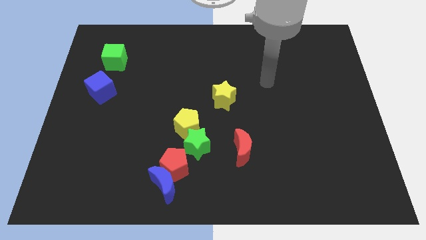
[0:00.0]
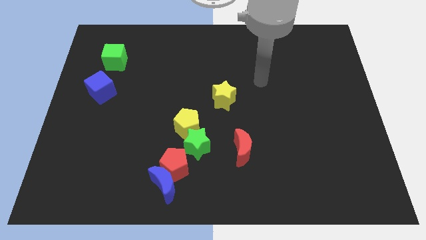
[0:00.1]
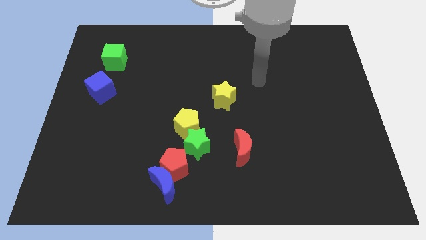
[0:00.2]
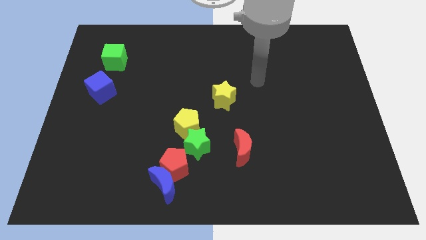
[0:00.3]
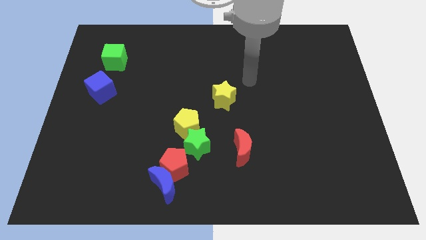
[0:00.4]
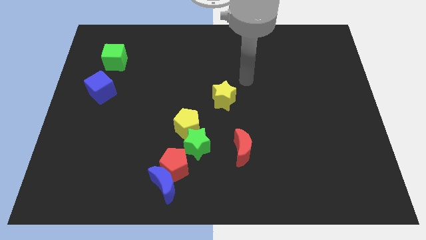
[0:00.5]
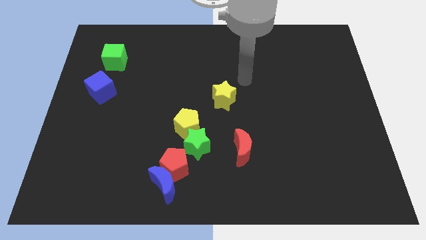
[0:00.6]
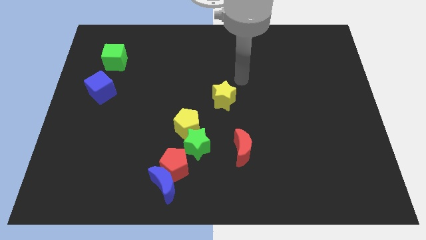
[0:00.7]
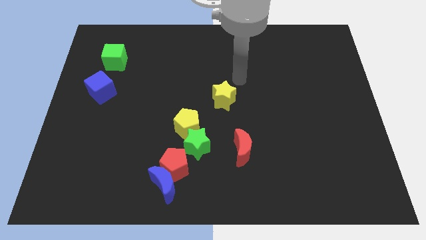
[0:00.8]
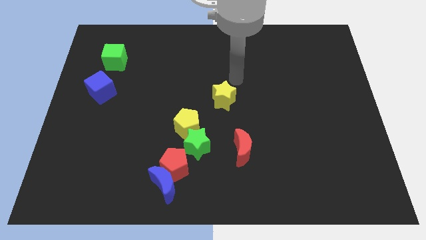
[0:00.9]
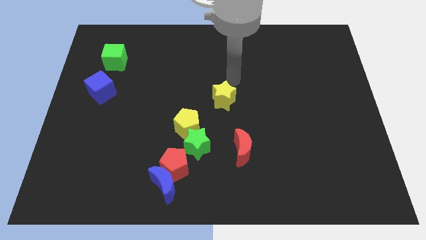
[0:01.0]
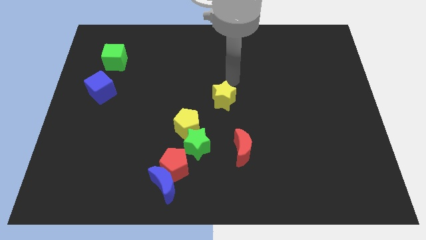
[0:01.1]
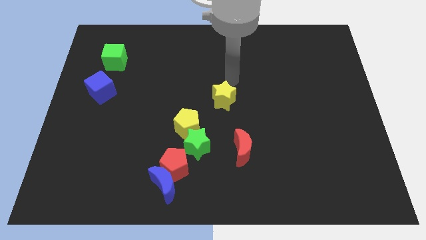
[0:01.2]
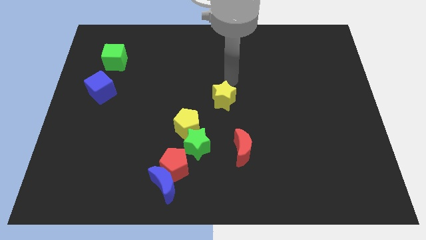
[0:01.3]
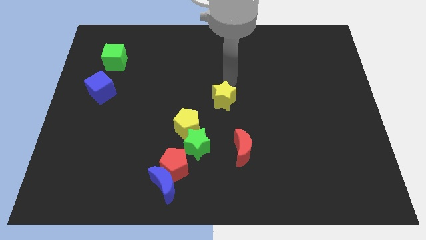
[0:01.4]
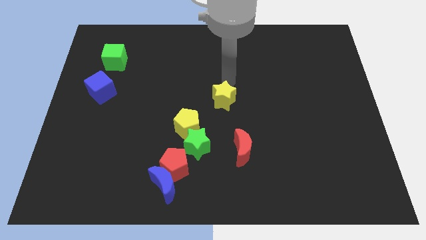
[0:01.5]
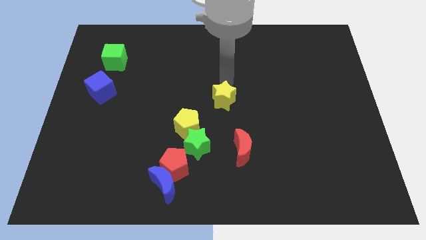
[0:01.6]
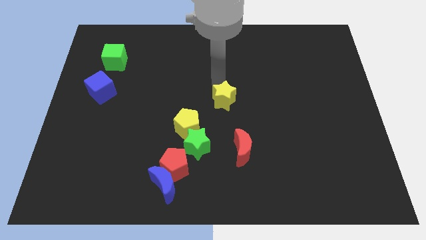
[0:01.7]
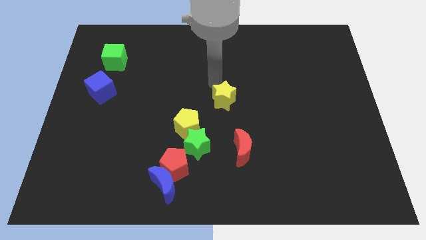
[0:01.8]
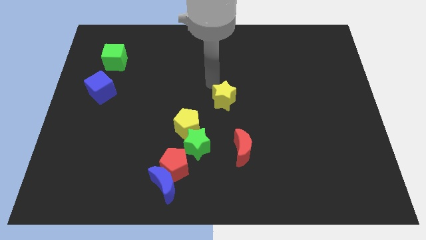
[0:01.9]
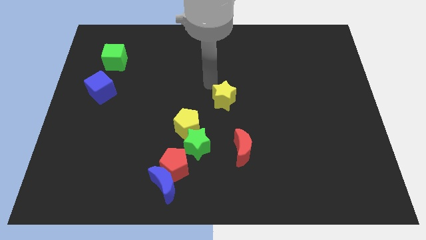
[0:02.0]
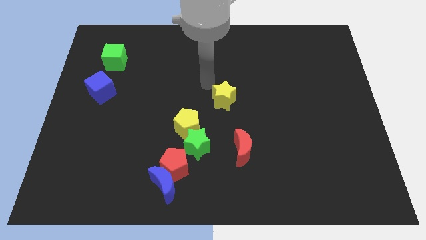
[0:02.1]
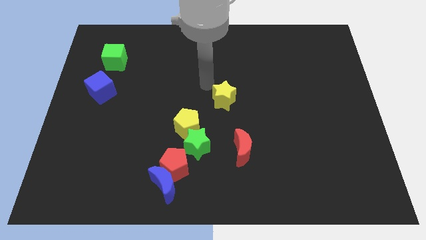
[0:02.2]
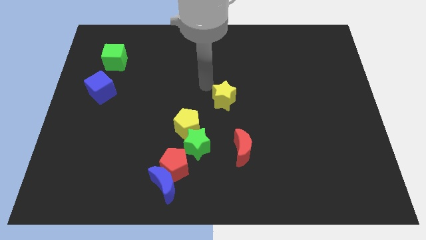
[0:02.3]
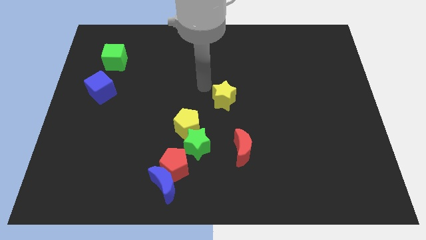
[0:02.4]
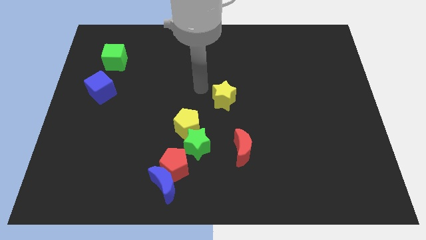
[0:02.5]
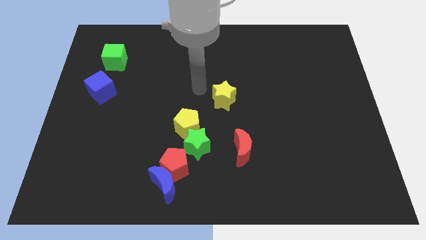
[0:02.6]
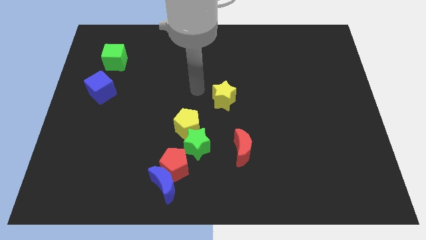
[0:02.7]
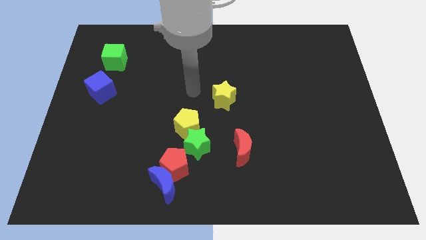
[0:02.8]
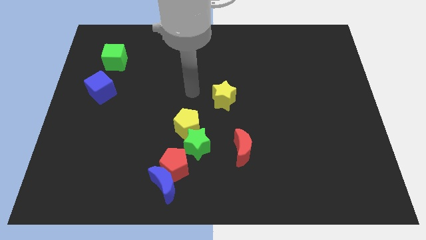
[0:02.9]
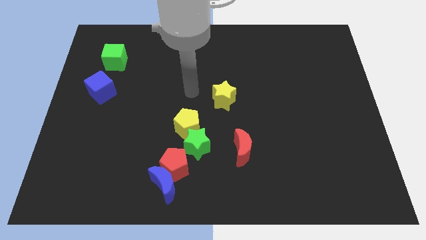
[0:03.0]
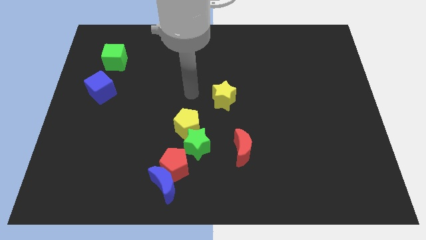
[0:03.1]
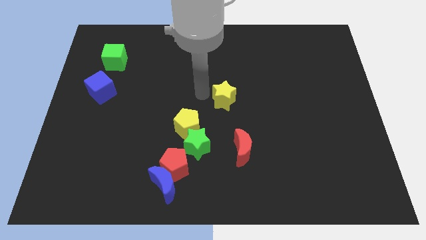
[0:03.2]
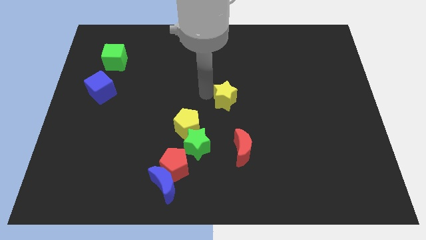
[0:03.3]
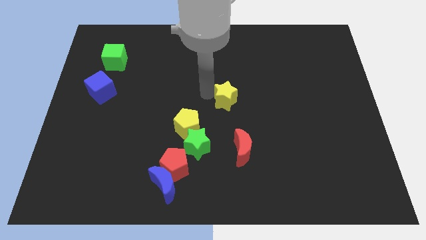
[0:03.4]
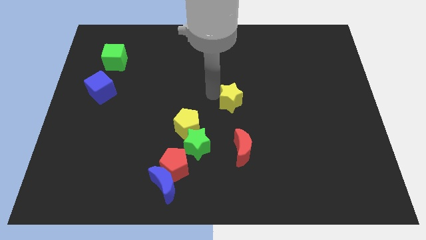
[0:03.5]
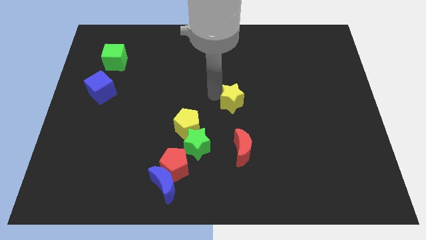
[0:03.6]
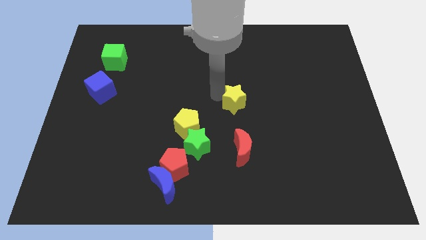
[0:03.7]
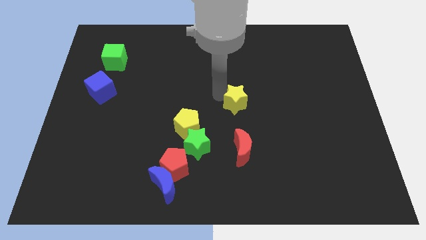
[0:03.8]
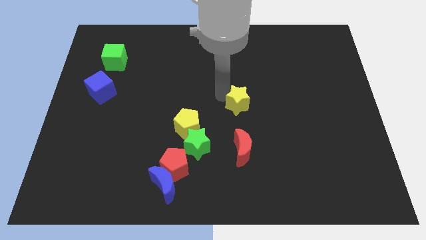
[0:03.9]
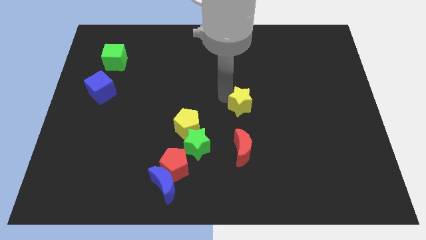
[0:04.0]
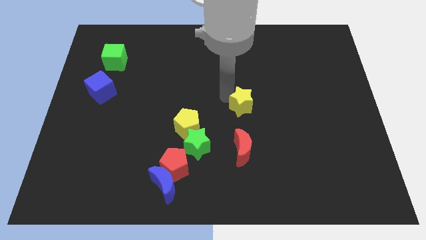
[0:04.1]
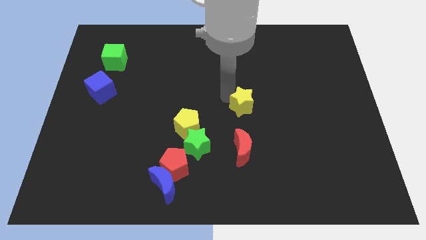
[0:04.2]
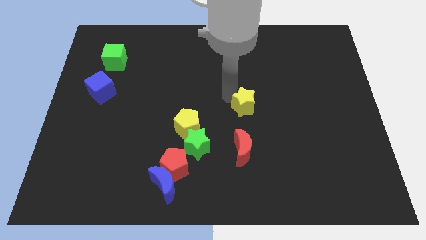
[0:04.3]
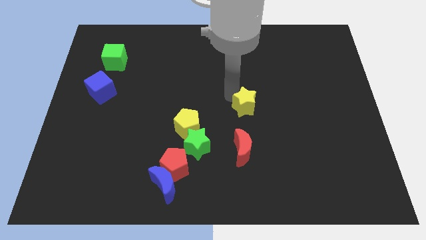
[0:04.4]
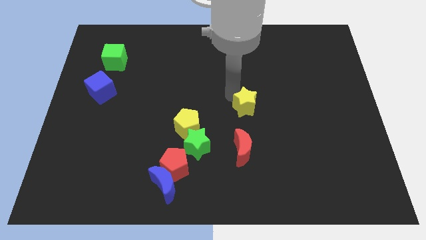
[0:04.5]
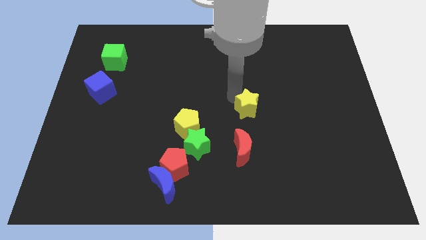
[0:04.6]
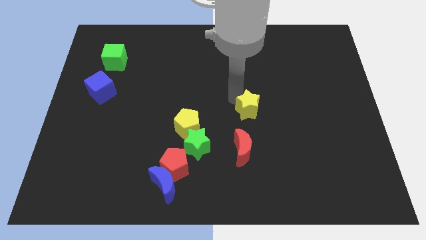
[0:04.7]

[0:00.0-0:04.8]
put the yellow star above the red moon

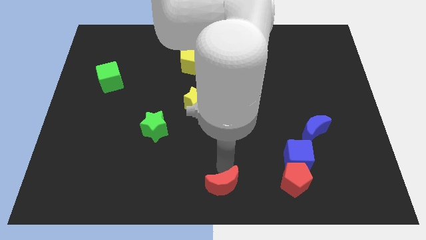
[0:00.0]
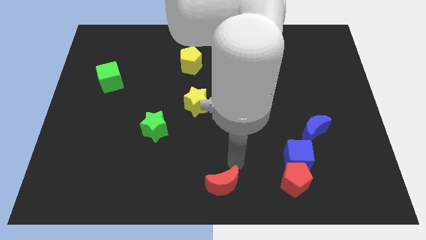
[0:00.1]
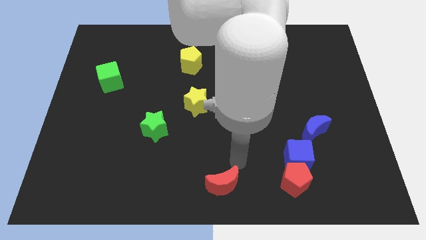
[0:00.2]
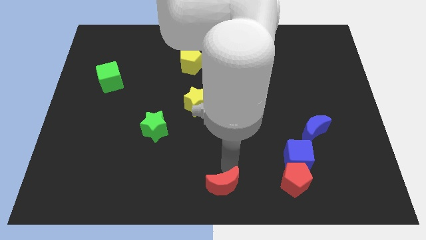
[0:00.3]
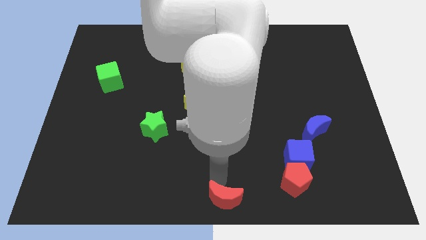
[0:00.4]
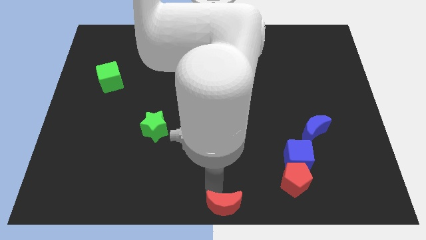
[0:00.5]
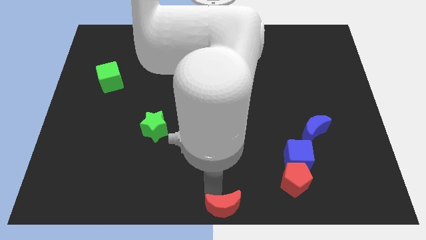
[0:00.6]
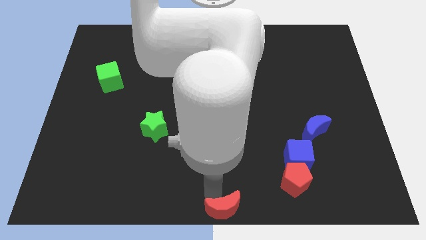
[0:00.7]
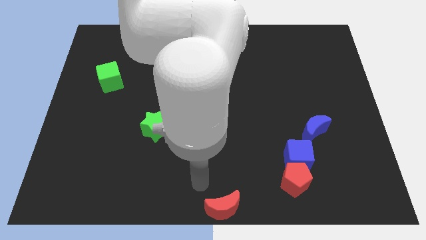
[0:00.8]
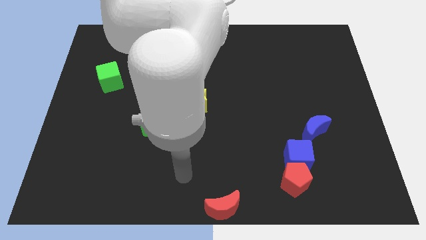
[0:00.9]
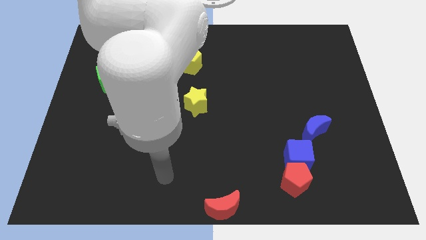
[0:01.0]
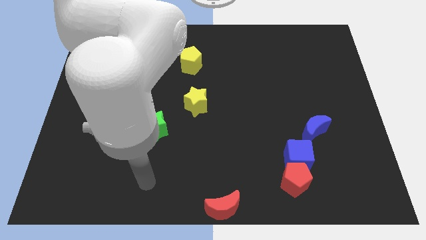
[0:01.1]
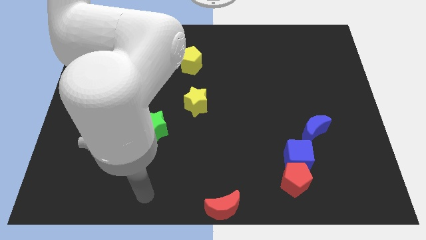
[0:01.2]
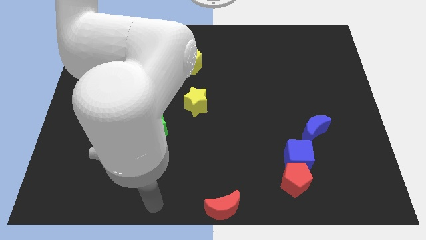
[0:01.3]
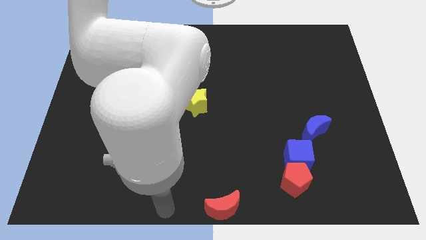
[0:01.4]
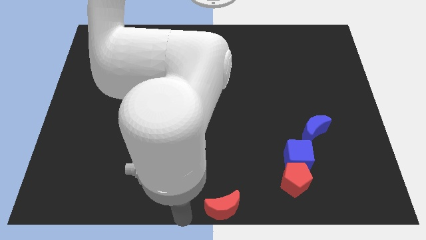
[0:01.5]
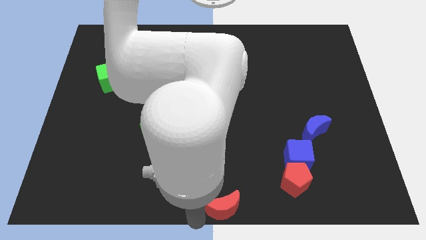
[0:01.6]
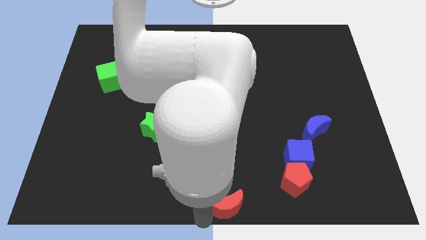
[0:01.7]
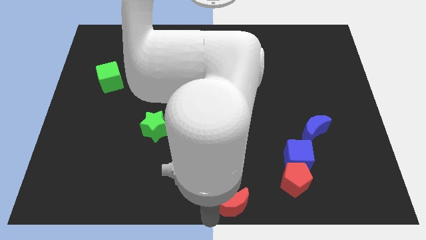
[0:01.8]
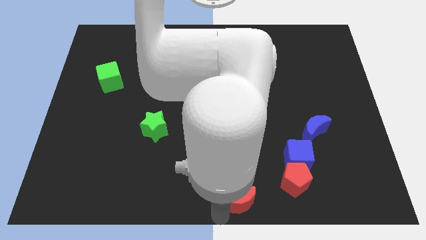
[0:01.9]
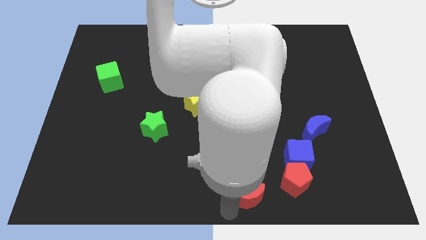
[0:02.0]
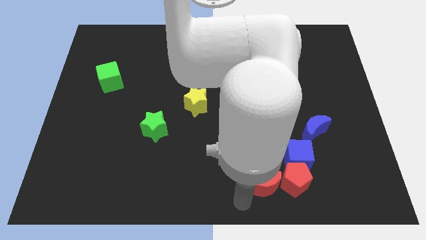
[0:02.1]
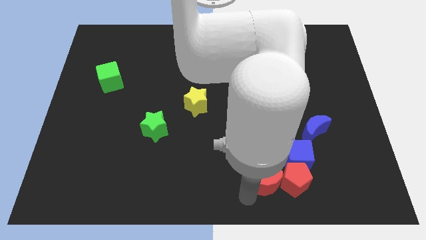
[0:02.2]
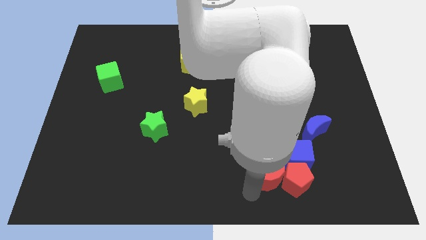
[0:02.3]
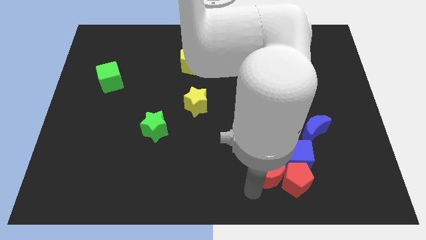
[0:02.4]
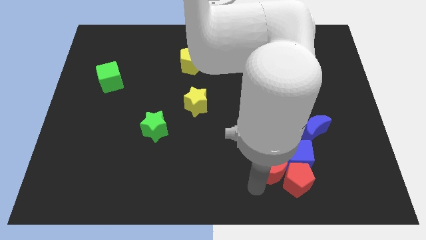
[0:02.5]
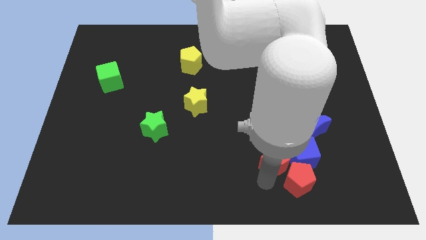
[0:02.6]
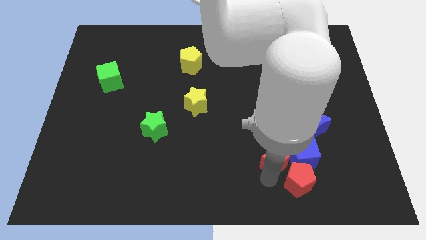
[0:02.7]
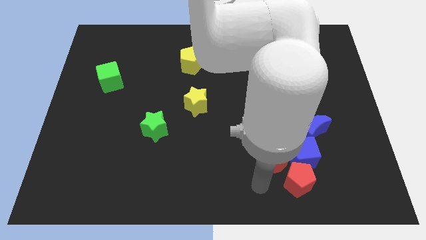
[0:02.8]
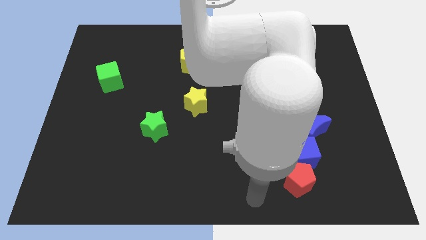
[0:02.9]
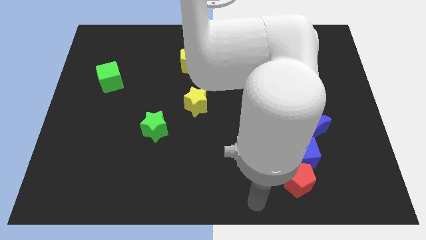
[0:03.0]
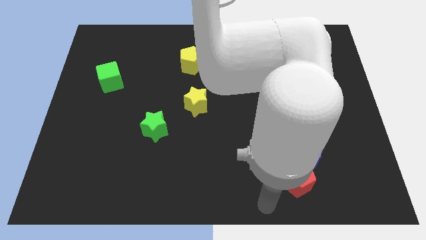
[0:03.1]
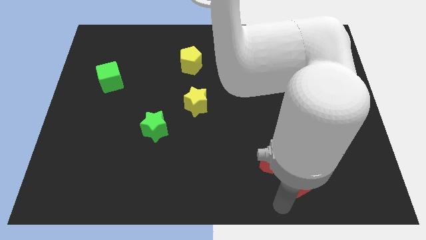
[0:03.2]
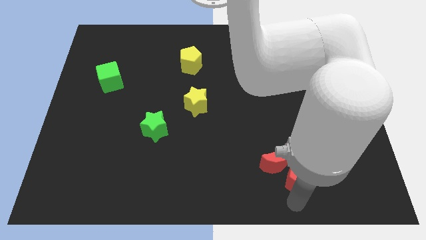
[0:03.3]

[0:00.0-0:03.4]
push the red crescent into the blue cube

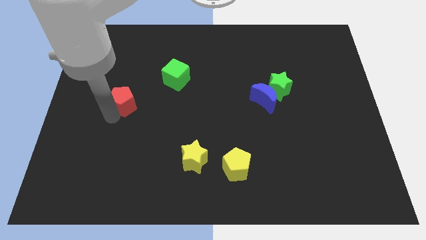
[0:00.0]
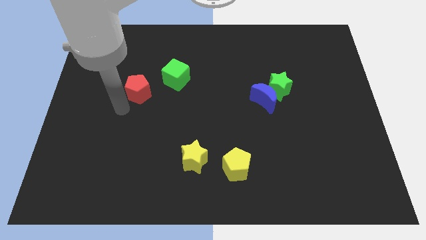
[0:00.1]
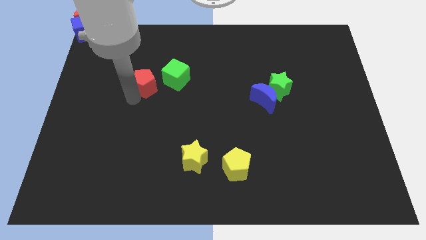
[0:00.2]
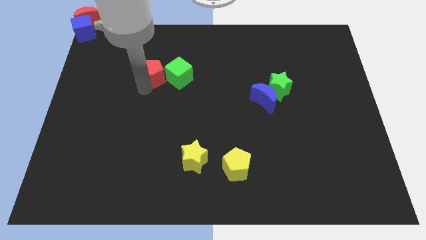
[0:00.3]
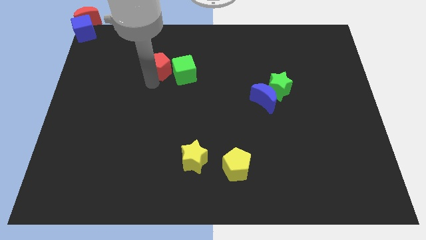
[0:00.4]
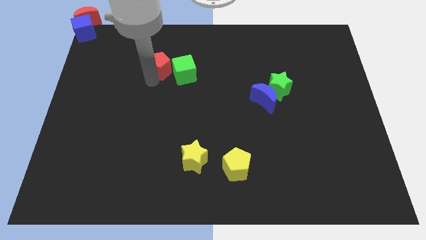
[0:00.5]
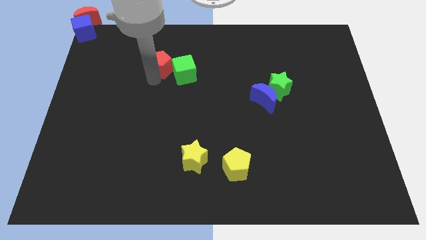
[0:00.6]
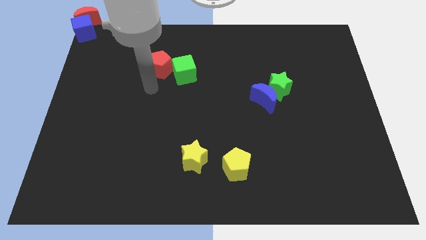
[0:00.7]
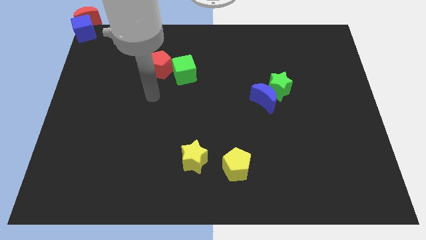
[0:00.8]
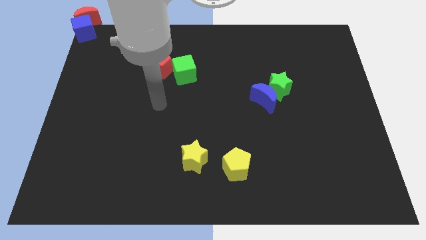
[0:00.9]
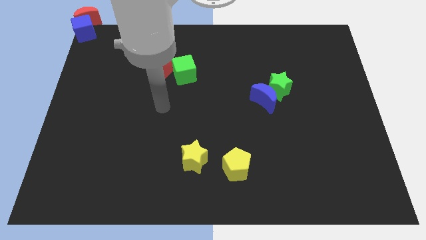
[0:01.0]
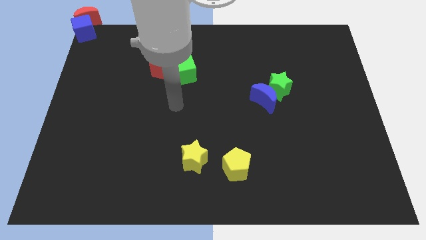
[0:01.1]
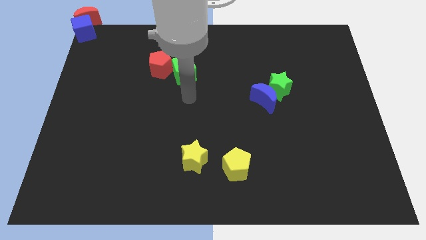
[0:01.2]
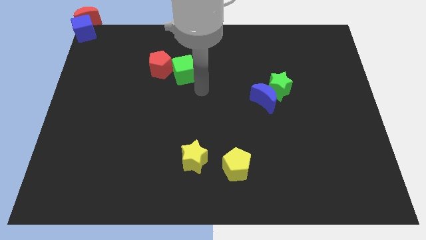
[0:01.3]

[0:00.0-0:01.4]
place the red pentagon into the left side of green cube
